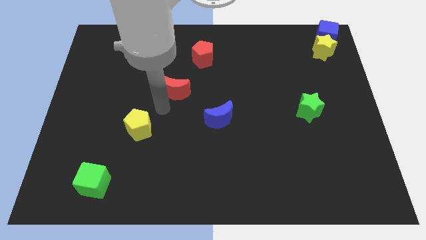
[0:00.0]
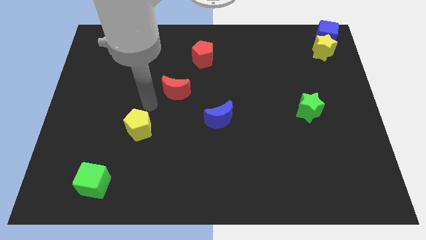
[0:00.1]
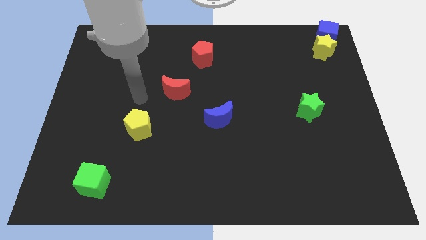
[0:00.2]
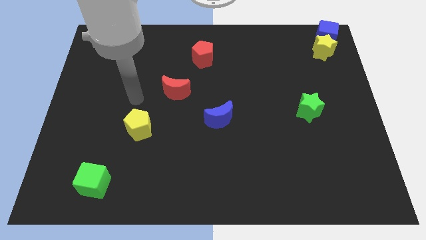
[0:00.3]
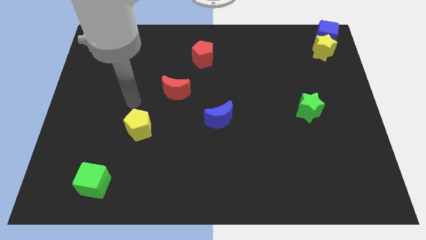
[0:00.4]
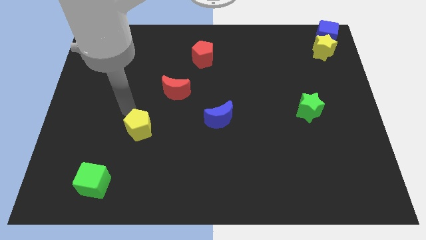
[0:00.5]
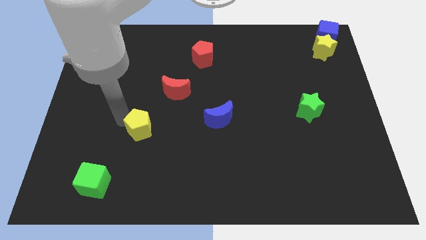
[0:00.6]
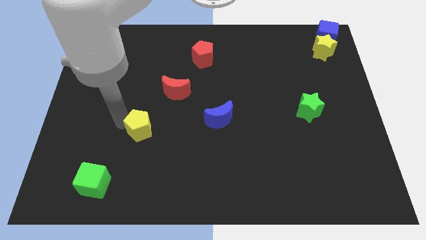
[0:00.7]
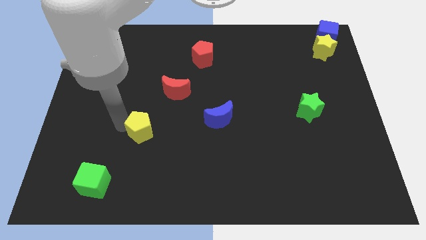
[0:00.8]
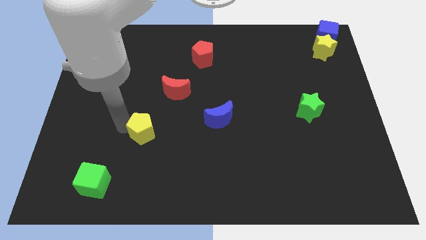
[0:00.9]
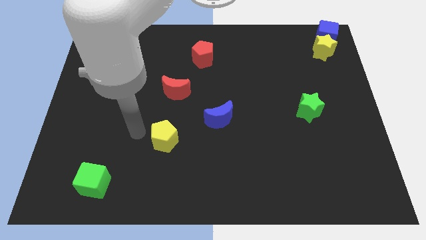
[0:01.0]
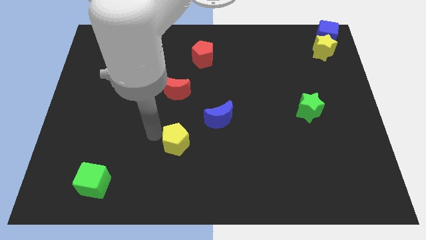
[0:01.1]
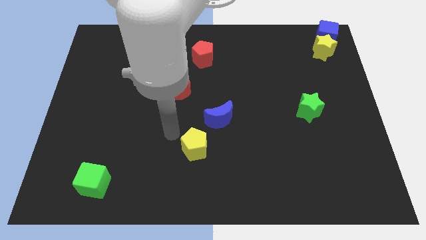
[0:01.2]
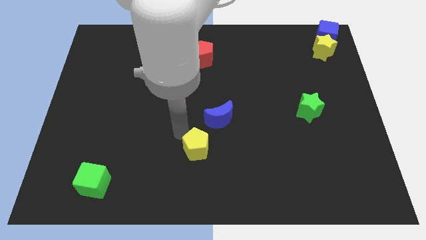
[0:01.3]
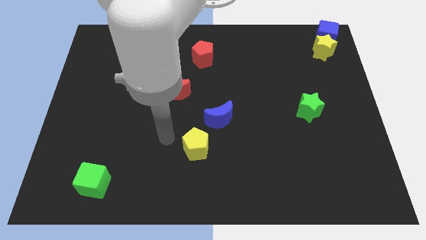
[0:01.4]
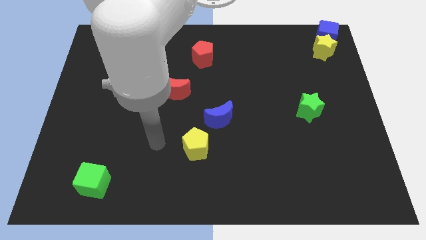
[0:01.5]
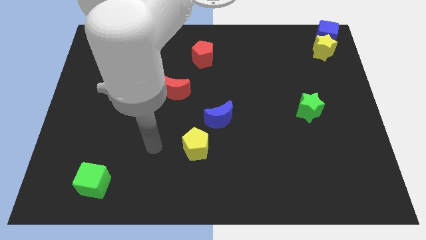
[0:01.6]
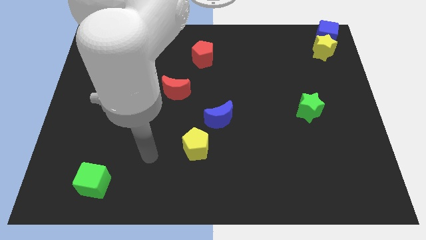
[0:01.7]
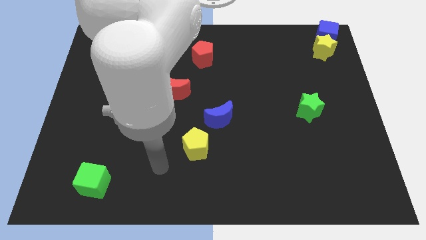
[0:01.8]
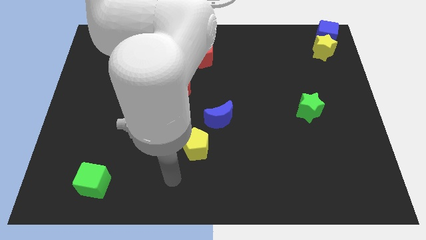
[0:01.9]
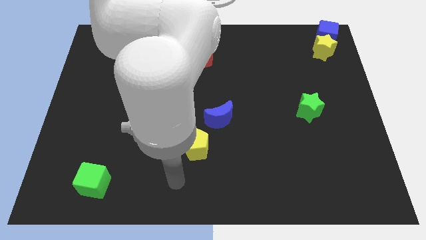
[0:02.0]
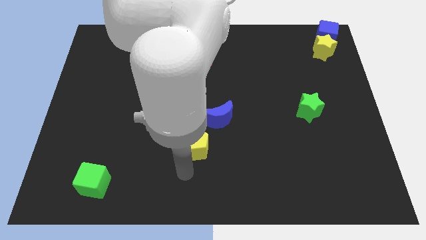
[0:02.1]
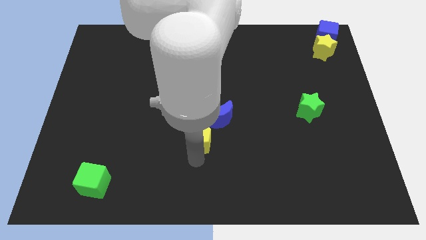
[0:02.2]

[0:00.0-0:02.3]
move the yellow pentagon to the bottom left of the blue crescent

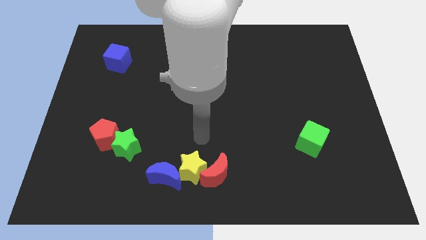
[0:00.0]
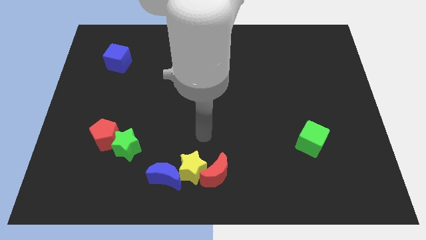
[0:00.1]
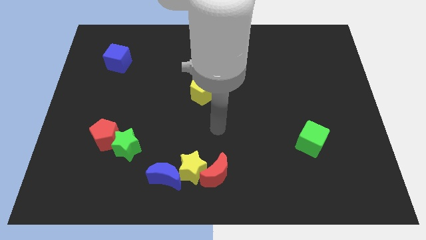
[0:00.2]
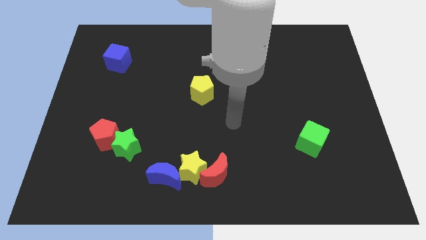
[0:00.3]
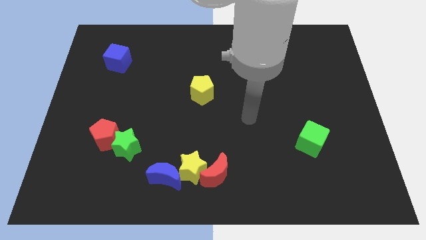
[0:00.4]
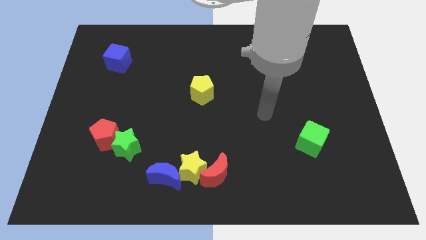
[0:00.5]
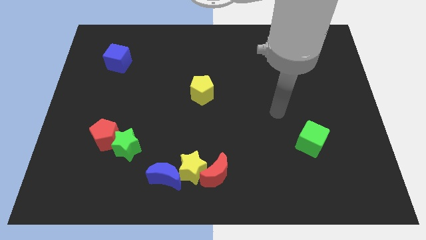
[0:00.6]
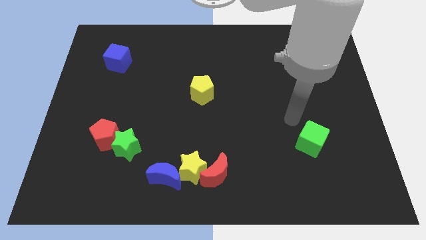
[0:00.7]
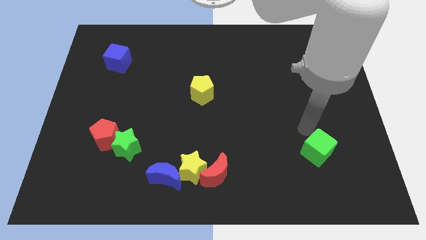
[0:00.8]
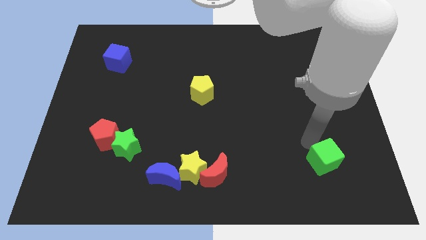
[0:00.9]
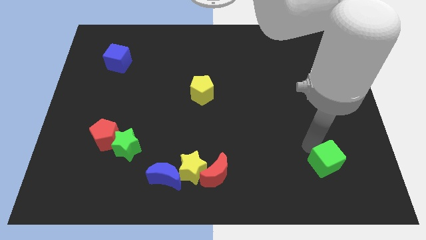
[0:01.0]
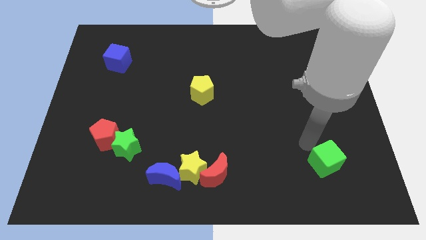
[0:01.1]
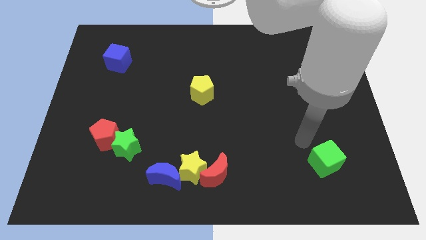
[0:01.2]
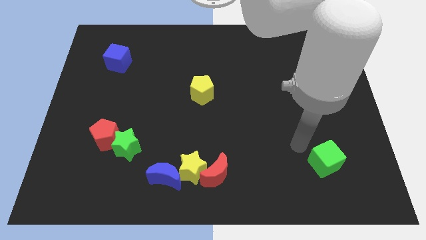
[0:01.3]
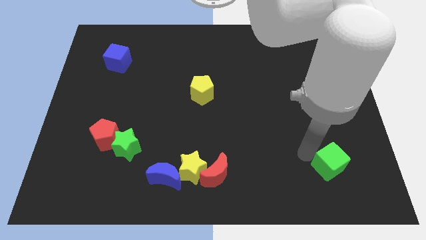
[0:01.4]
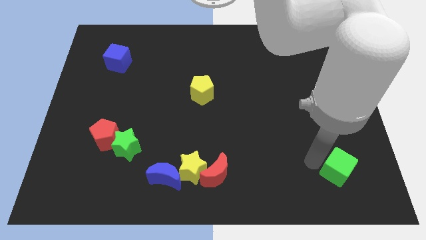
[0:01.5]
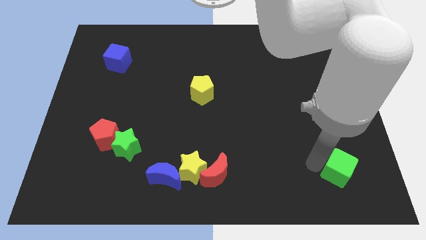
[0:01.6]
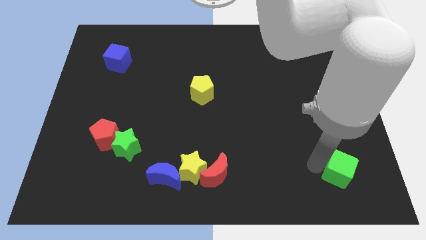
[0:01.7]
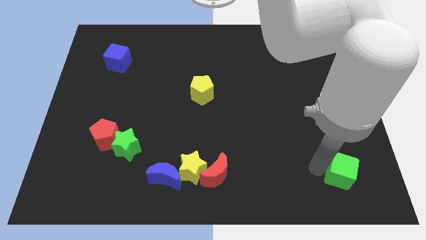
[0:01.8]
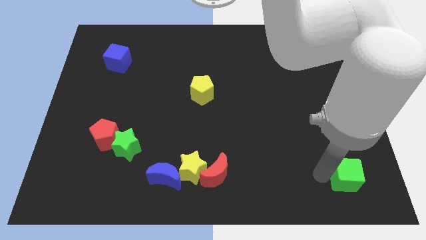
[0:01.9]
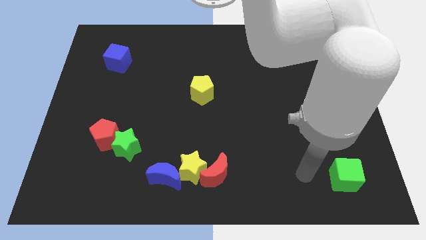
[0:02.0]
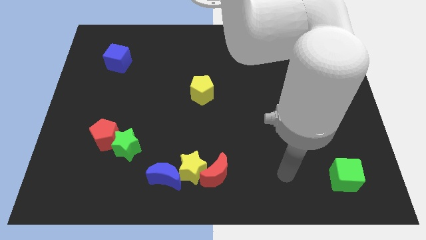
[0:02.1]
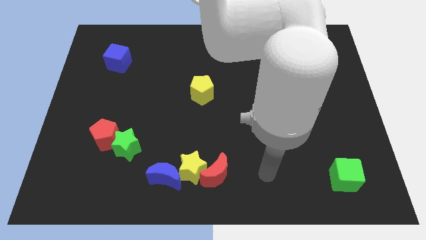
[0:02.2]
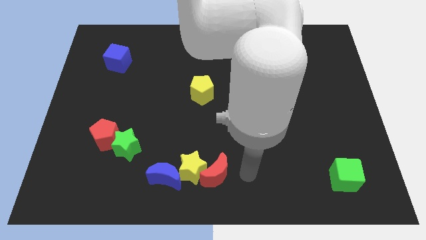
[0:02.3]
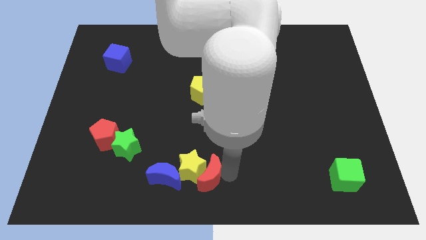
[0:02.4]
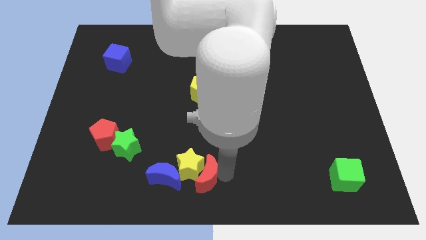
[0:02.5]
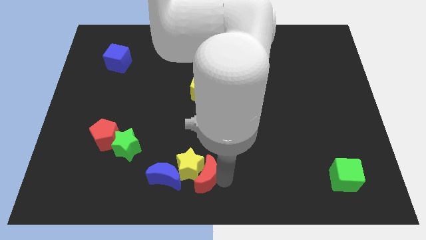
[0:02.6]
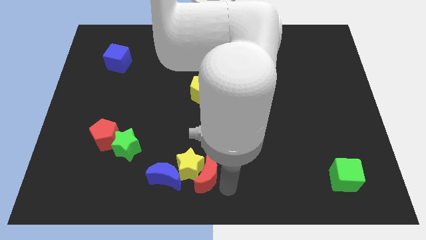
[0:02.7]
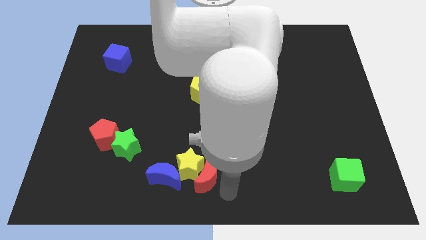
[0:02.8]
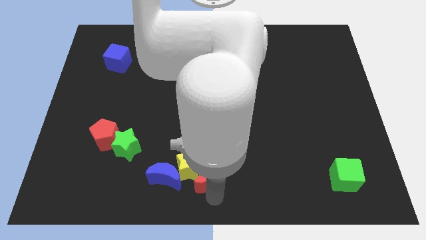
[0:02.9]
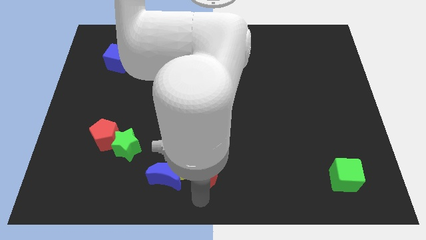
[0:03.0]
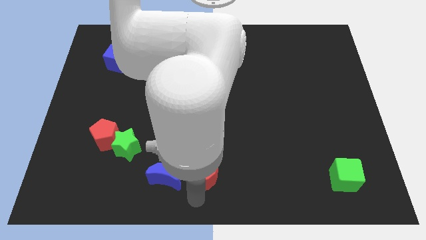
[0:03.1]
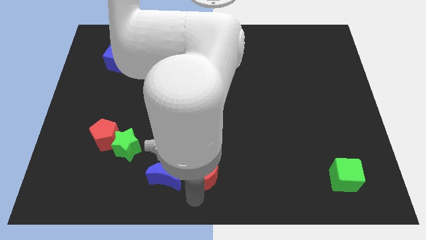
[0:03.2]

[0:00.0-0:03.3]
push the green cube towards bottom right

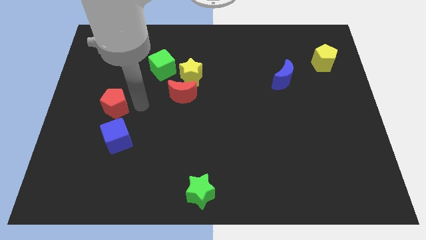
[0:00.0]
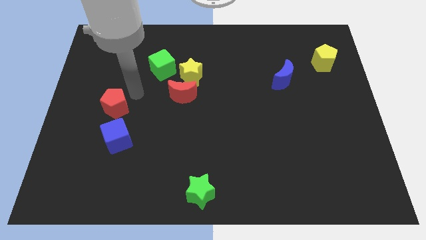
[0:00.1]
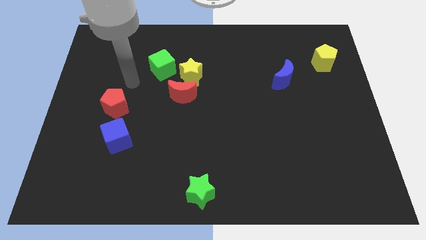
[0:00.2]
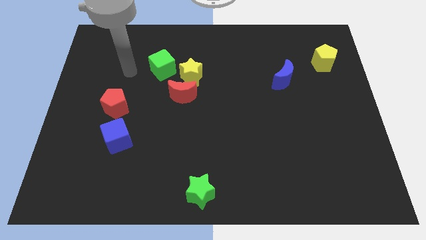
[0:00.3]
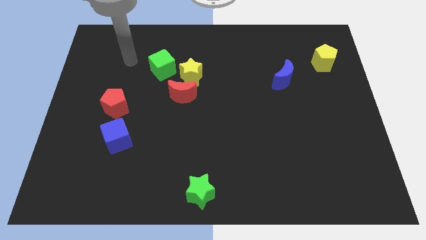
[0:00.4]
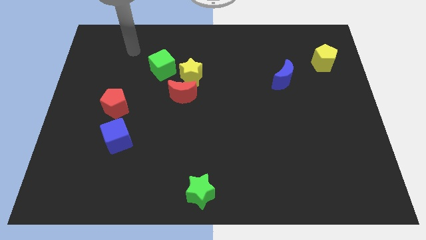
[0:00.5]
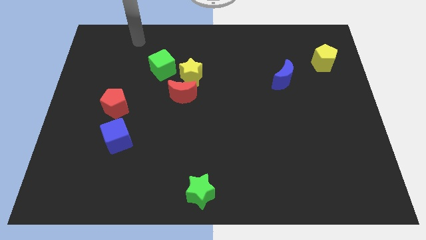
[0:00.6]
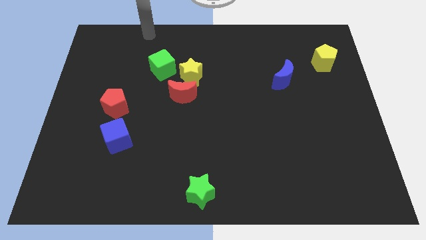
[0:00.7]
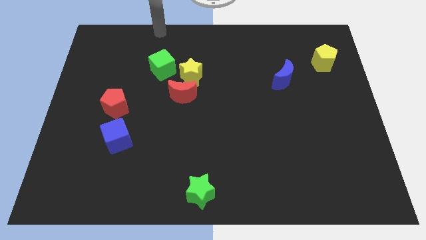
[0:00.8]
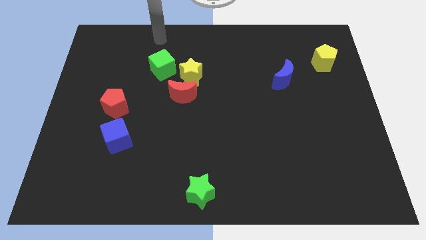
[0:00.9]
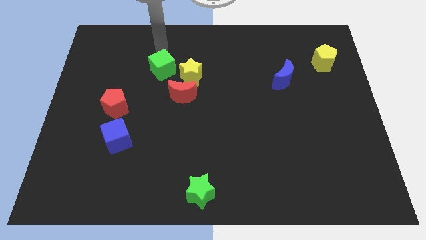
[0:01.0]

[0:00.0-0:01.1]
touch the top side of the green cube

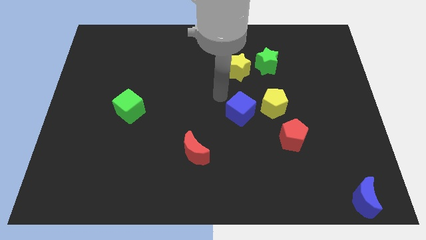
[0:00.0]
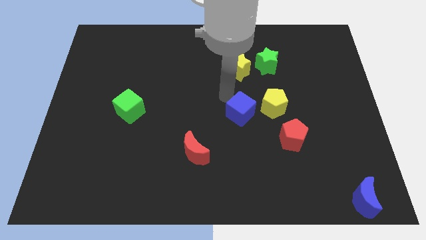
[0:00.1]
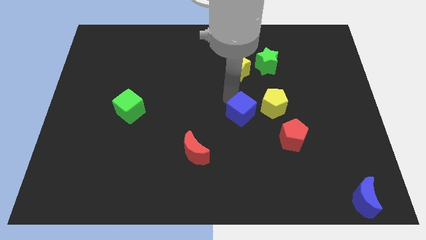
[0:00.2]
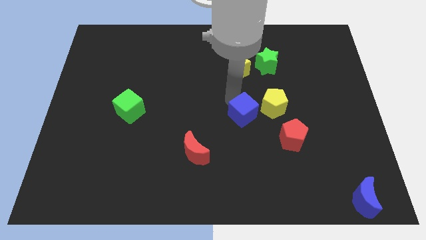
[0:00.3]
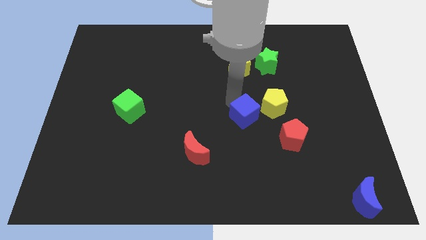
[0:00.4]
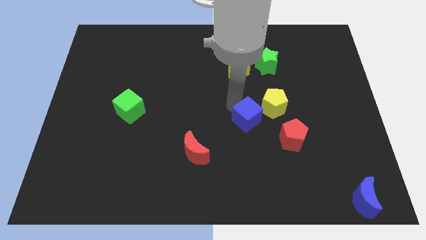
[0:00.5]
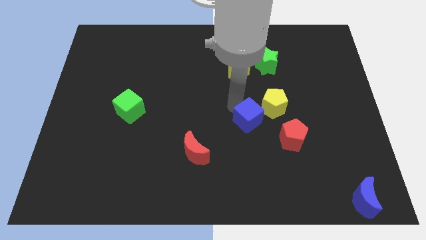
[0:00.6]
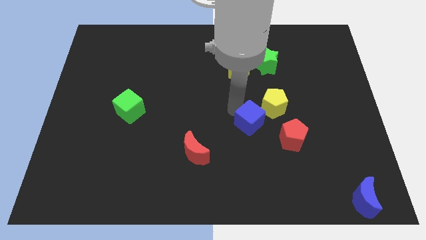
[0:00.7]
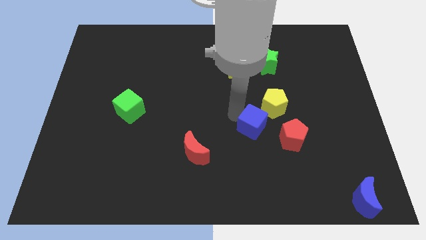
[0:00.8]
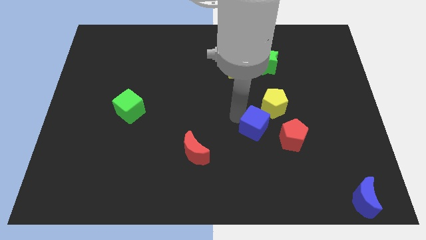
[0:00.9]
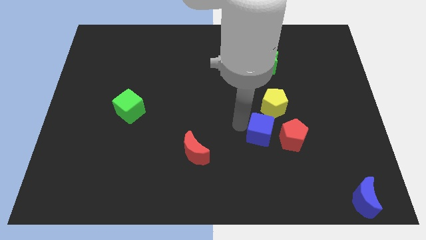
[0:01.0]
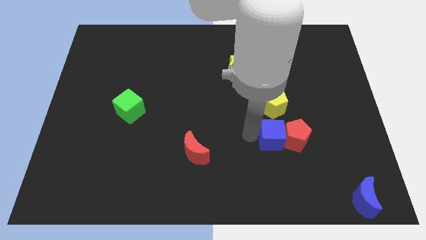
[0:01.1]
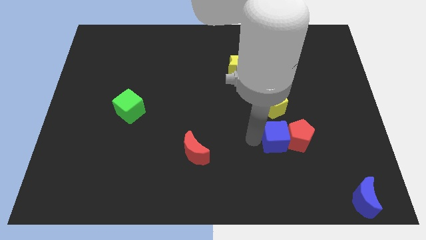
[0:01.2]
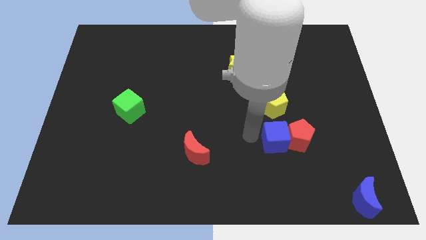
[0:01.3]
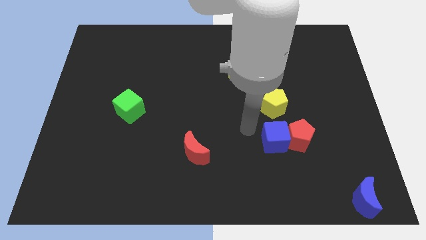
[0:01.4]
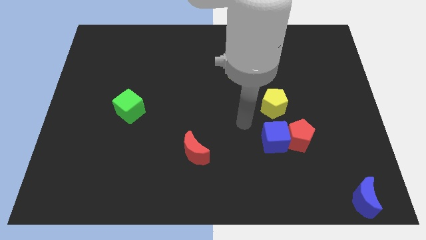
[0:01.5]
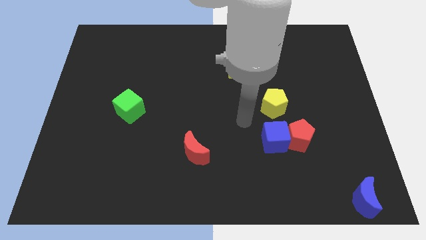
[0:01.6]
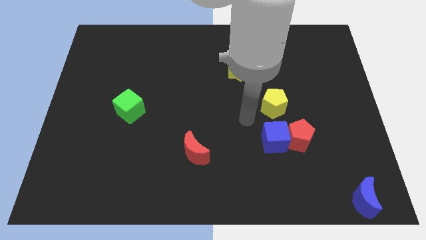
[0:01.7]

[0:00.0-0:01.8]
push the blue cube into the red pentagon

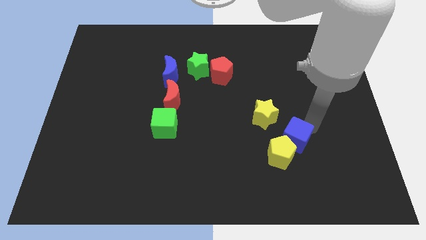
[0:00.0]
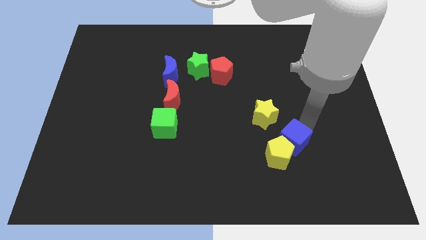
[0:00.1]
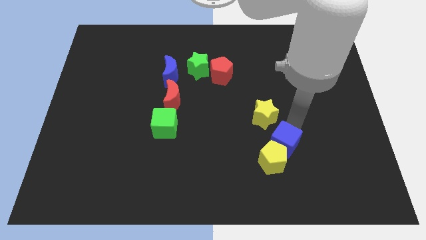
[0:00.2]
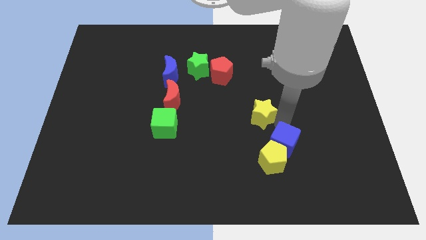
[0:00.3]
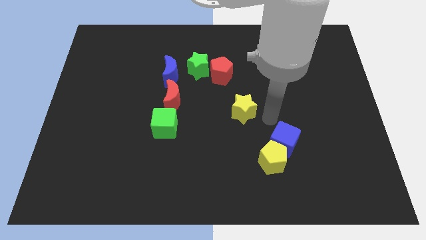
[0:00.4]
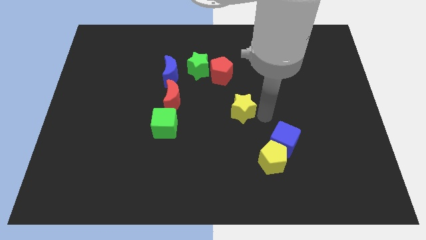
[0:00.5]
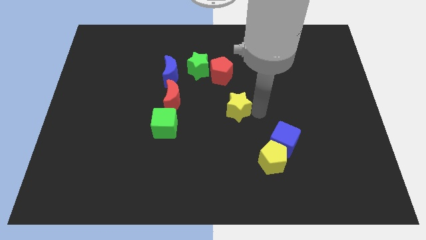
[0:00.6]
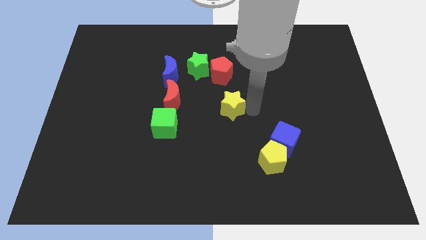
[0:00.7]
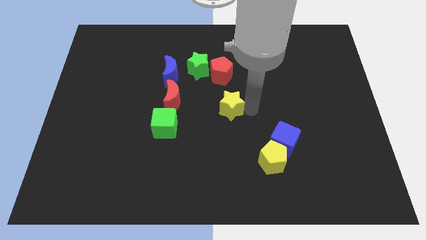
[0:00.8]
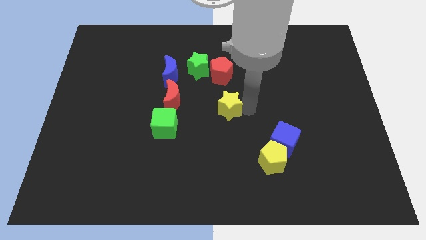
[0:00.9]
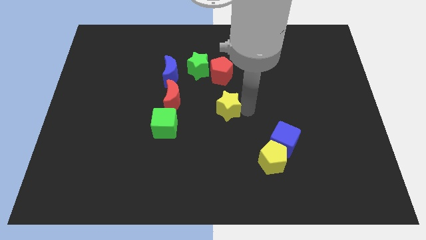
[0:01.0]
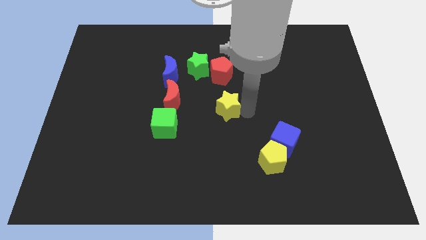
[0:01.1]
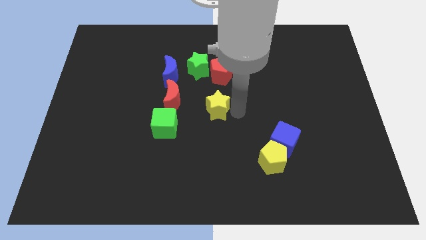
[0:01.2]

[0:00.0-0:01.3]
place the yellow star down to the red pentagon
